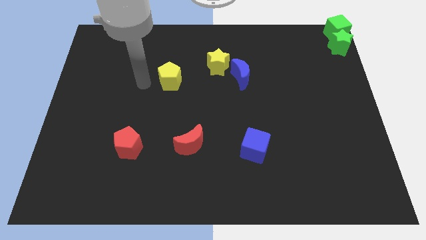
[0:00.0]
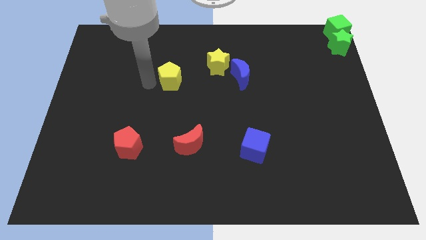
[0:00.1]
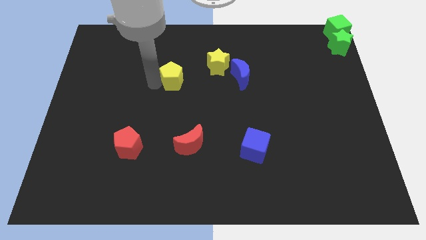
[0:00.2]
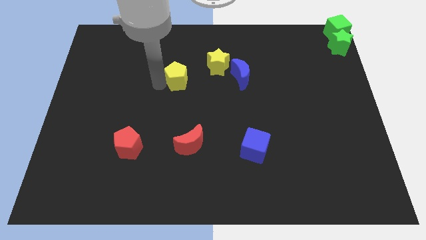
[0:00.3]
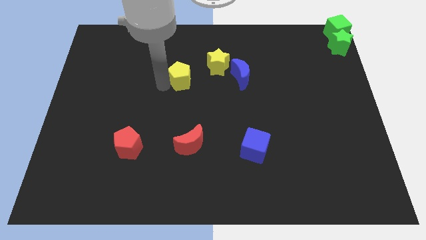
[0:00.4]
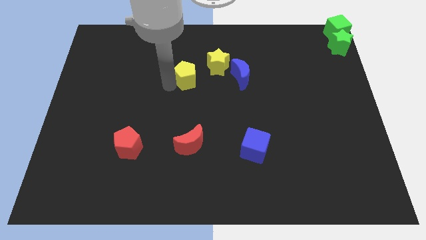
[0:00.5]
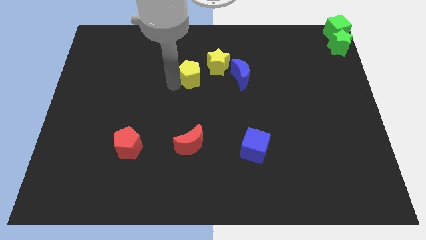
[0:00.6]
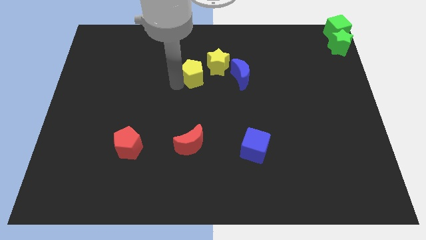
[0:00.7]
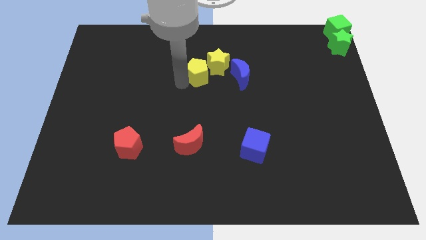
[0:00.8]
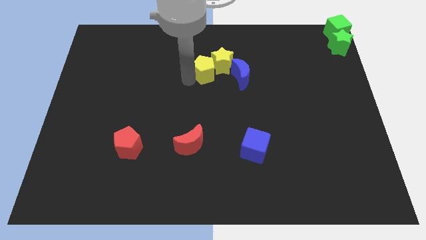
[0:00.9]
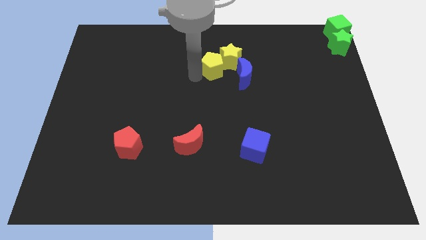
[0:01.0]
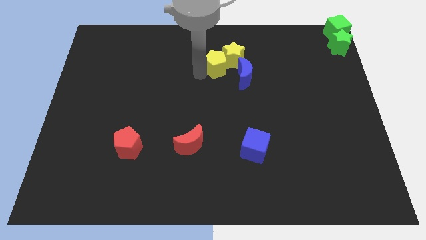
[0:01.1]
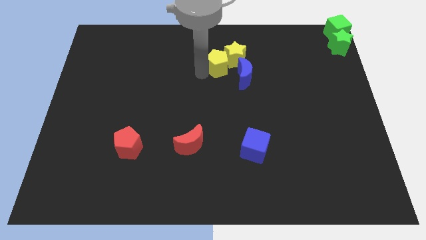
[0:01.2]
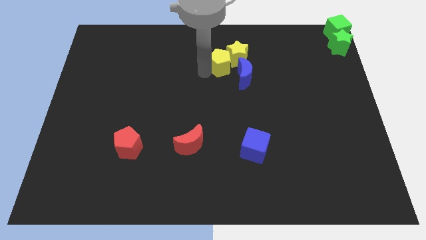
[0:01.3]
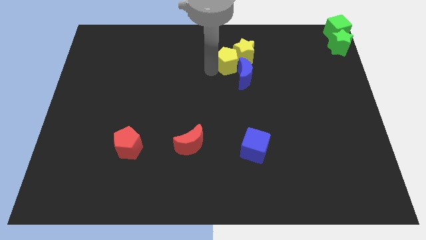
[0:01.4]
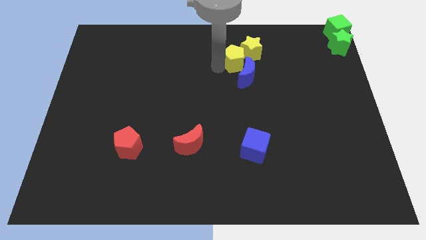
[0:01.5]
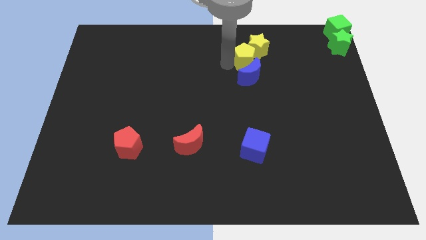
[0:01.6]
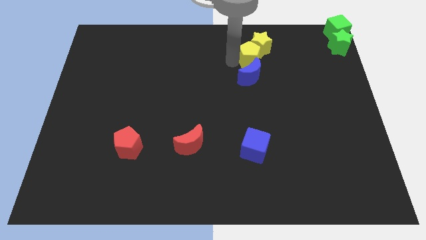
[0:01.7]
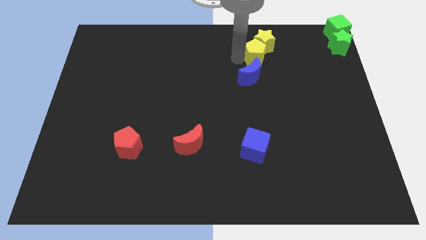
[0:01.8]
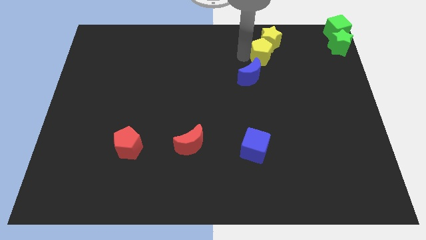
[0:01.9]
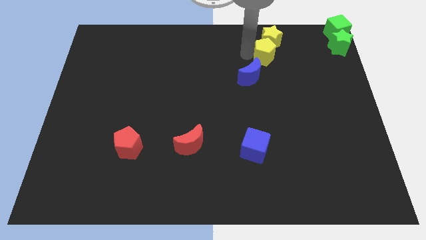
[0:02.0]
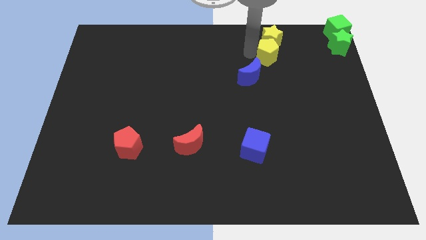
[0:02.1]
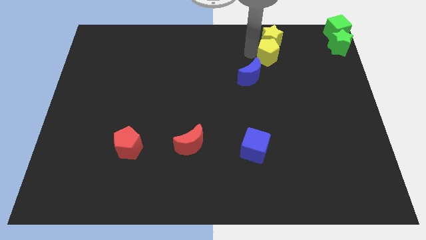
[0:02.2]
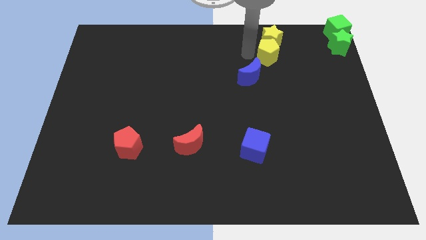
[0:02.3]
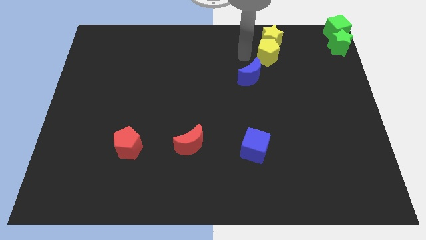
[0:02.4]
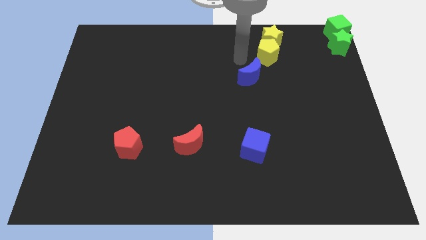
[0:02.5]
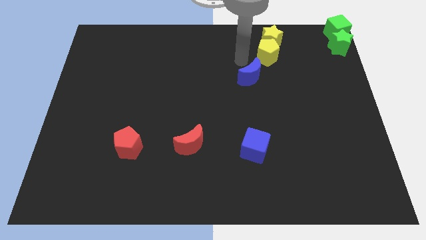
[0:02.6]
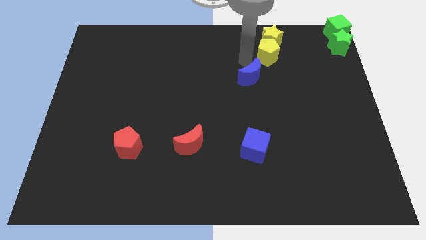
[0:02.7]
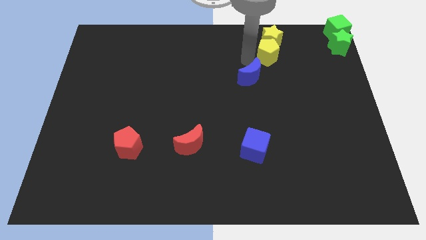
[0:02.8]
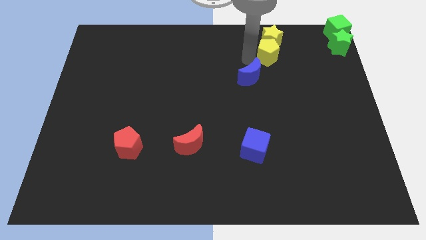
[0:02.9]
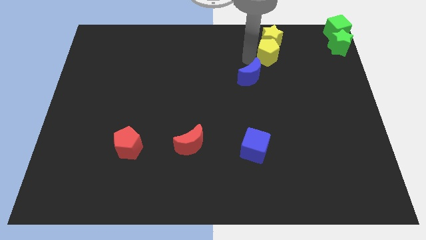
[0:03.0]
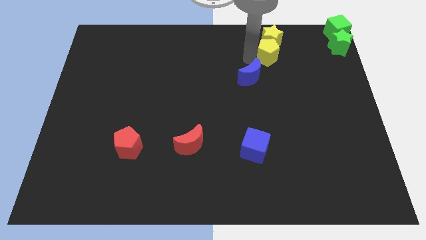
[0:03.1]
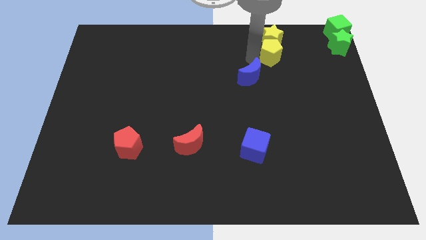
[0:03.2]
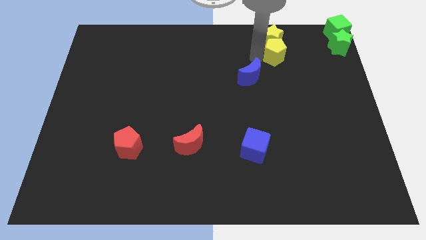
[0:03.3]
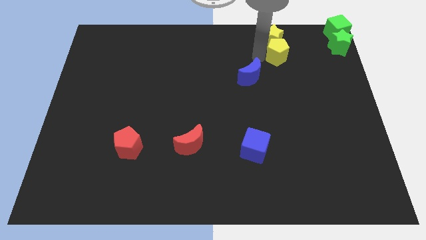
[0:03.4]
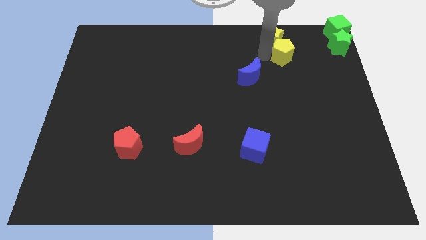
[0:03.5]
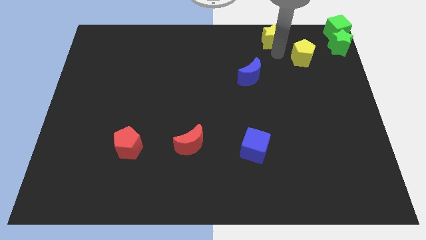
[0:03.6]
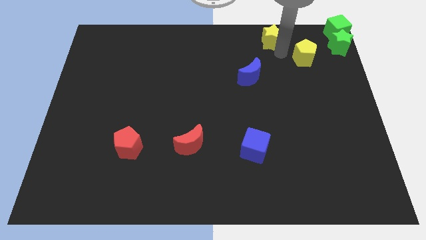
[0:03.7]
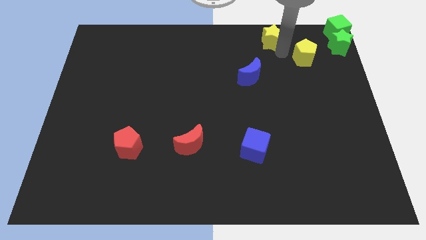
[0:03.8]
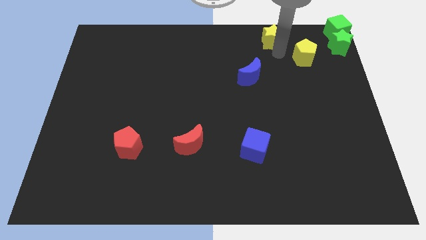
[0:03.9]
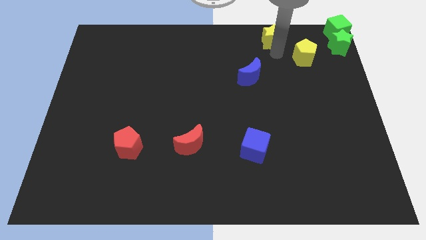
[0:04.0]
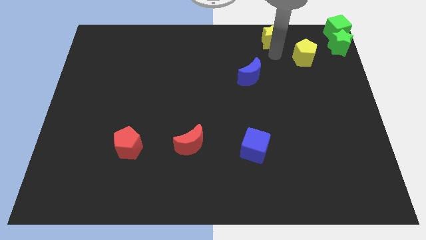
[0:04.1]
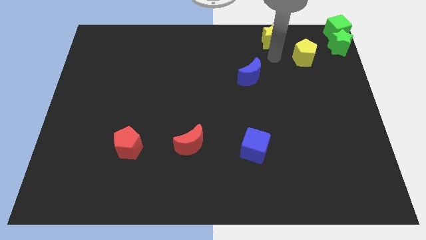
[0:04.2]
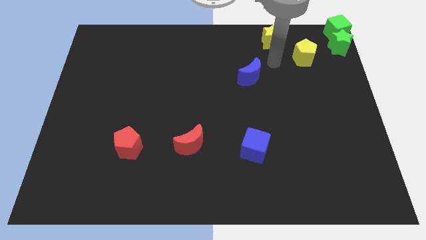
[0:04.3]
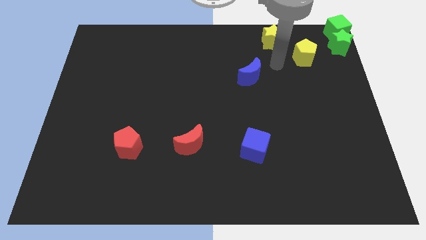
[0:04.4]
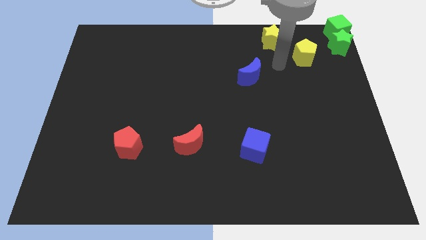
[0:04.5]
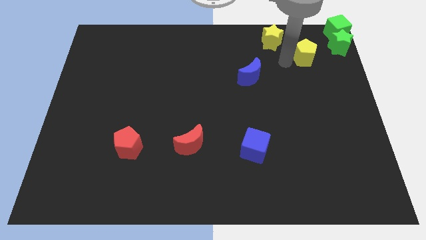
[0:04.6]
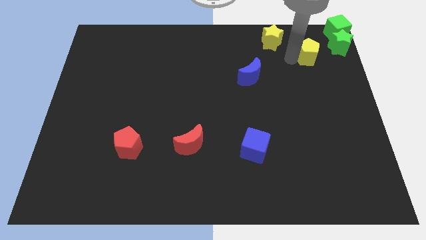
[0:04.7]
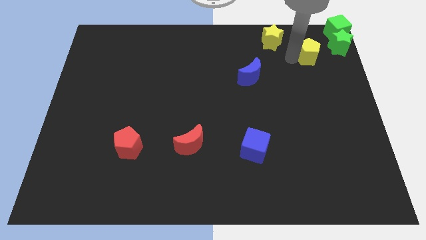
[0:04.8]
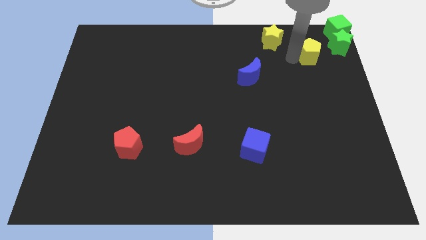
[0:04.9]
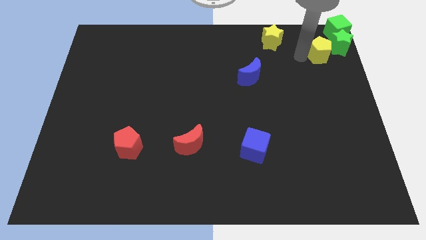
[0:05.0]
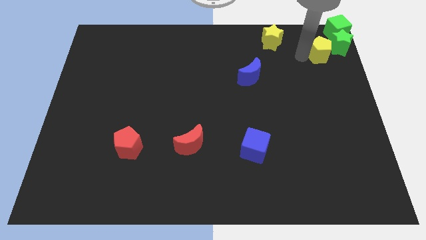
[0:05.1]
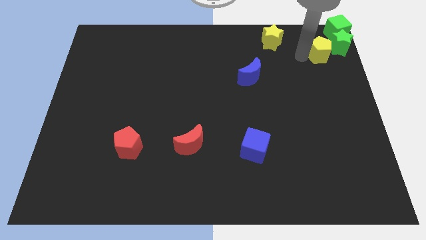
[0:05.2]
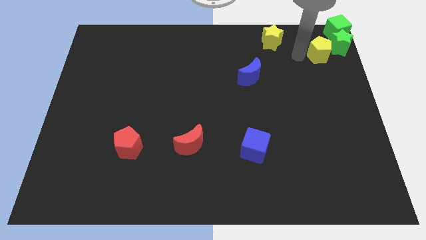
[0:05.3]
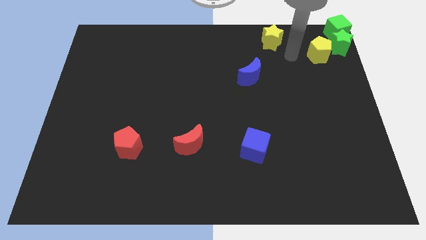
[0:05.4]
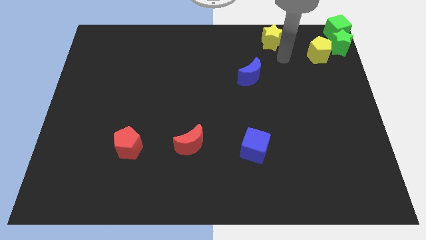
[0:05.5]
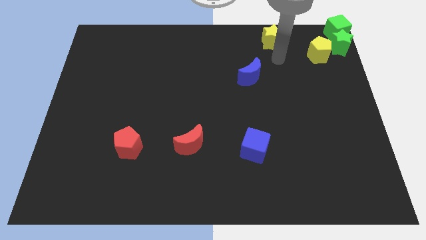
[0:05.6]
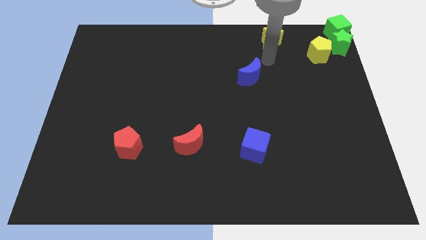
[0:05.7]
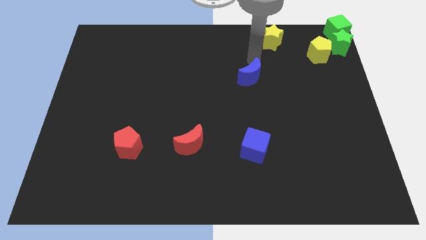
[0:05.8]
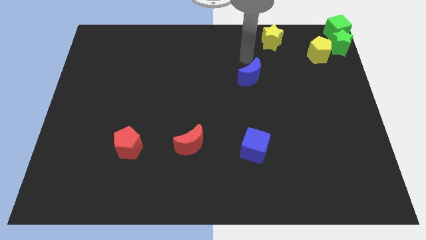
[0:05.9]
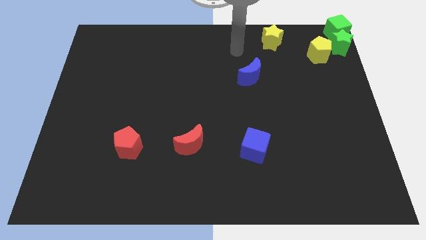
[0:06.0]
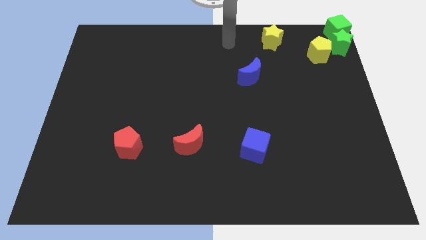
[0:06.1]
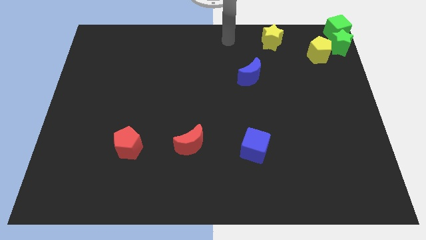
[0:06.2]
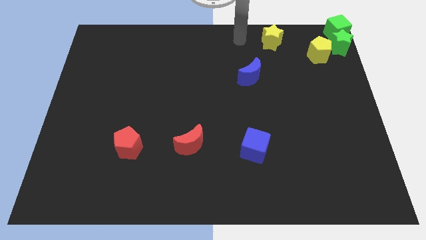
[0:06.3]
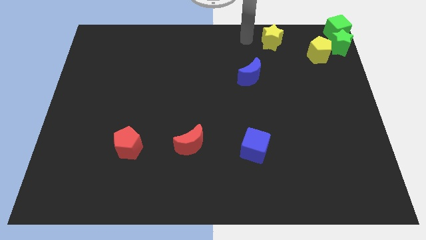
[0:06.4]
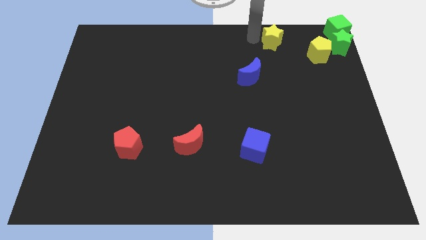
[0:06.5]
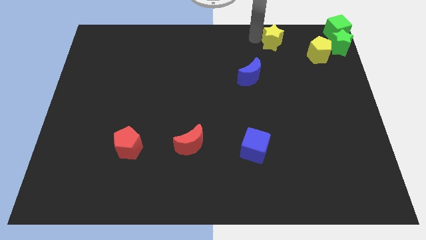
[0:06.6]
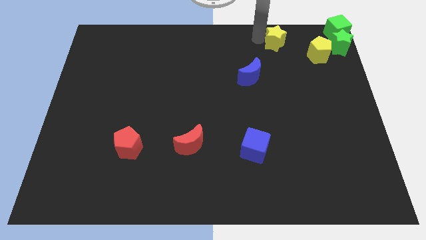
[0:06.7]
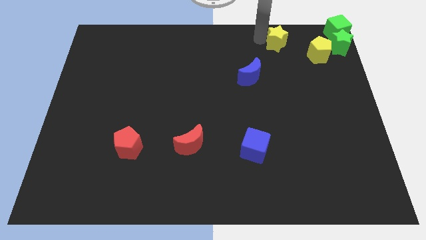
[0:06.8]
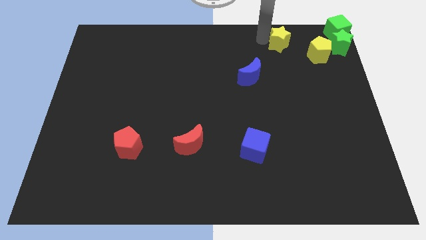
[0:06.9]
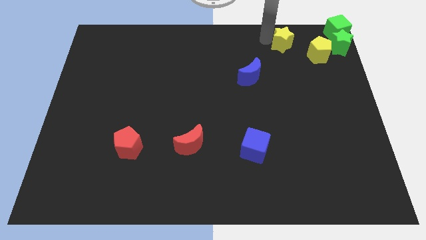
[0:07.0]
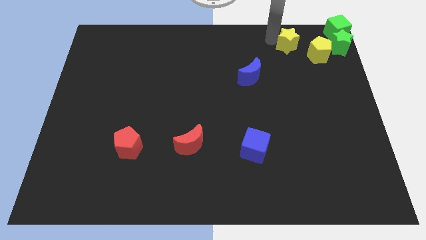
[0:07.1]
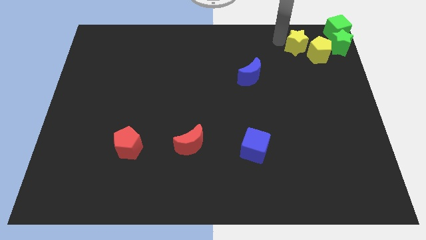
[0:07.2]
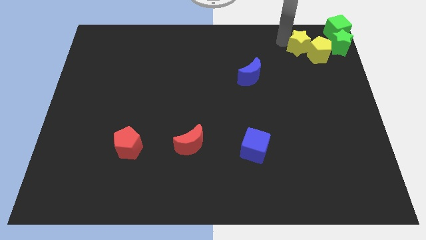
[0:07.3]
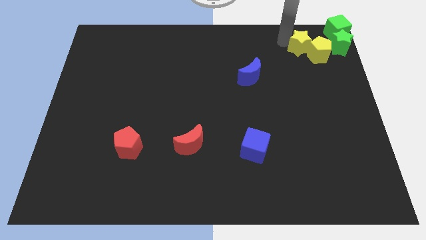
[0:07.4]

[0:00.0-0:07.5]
place the yellow star and yellow pentagon to the top right of the board

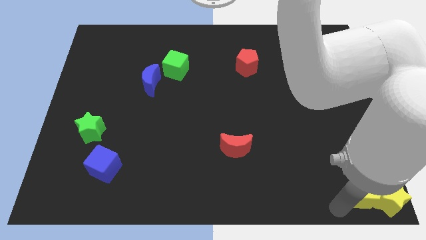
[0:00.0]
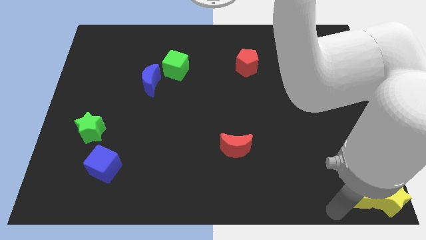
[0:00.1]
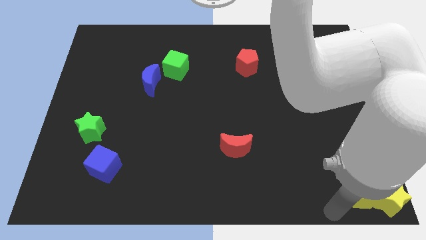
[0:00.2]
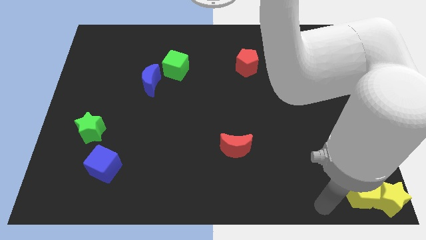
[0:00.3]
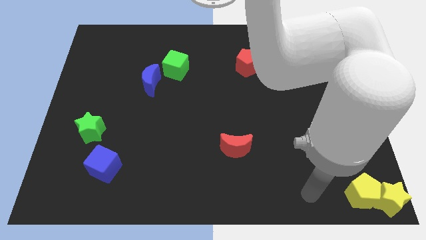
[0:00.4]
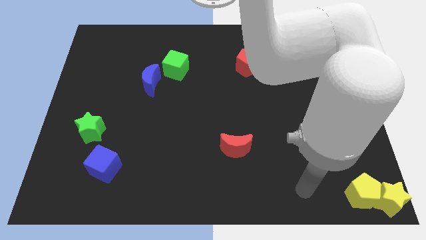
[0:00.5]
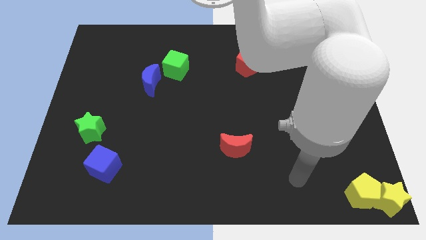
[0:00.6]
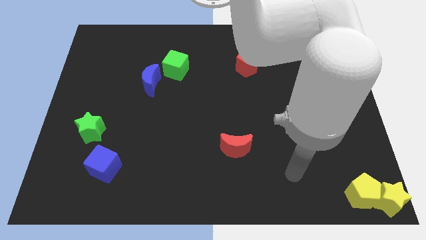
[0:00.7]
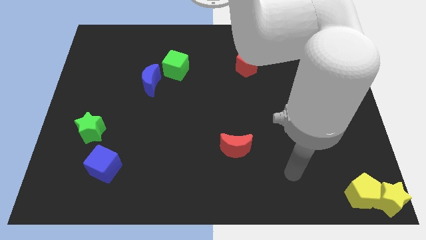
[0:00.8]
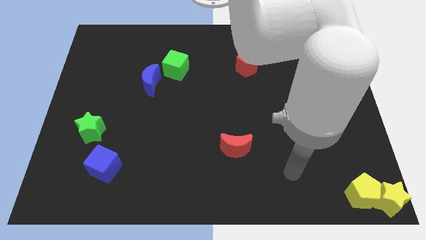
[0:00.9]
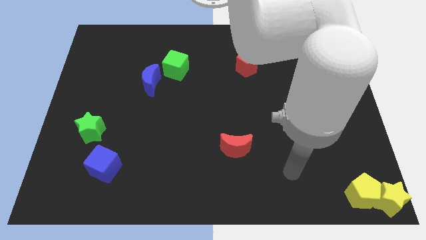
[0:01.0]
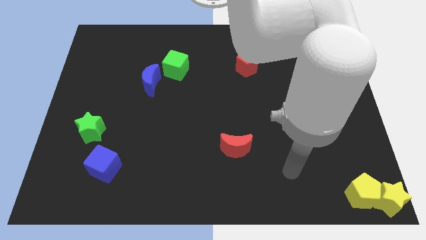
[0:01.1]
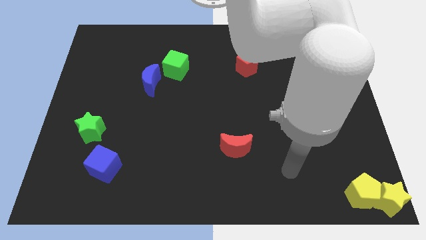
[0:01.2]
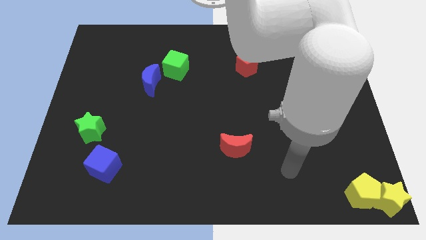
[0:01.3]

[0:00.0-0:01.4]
move the arm near the red crescent
